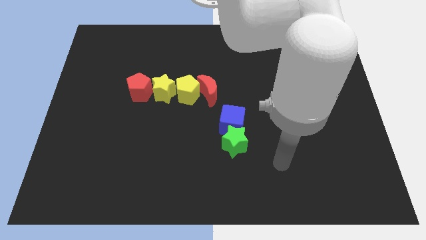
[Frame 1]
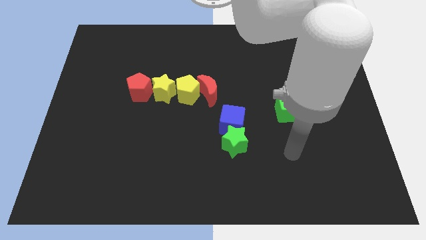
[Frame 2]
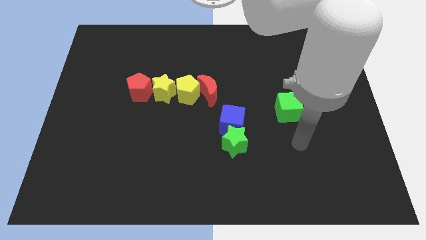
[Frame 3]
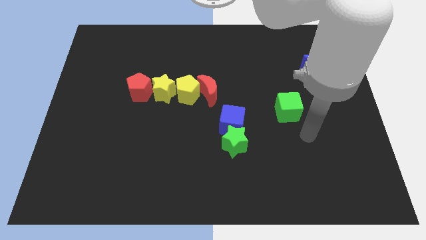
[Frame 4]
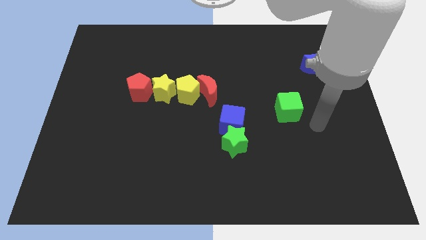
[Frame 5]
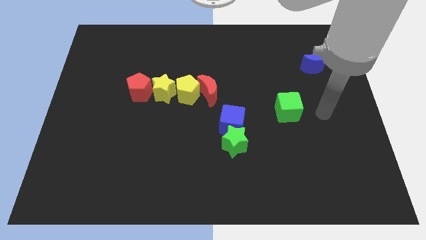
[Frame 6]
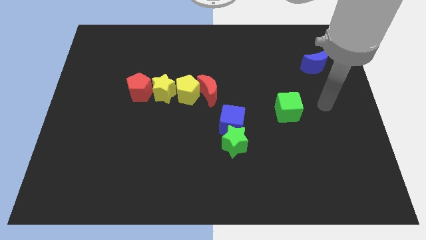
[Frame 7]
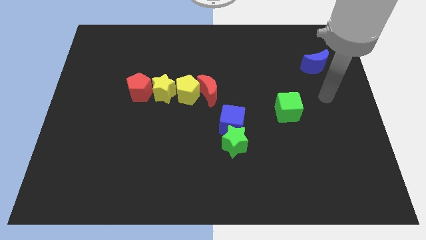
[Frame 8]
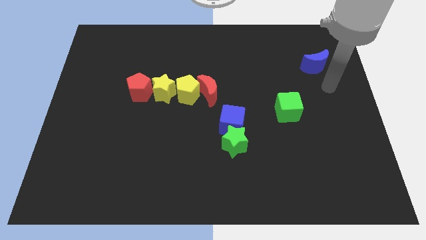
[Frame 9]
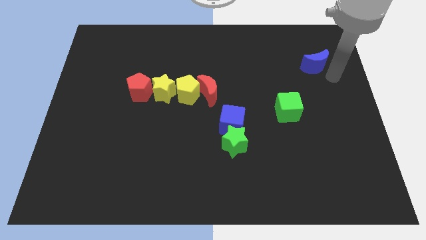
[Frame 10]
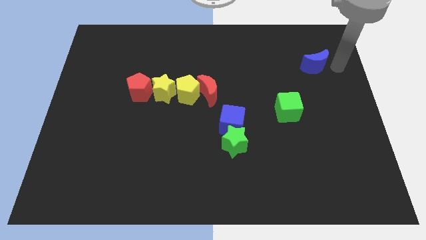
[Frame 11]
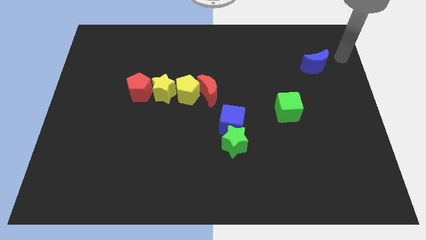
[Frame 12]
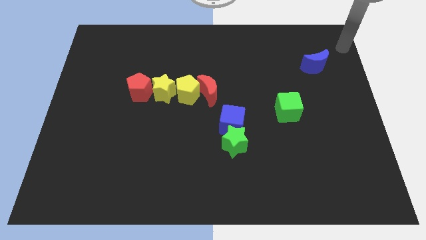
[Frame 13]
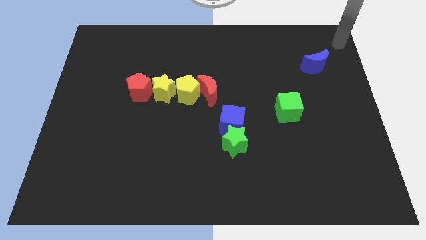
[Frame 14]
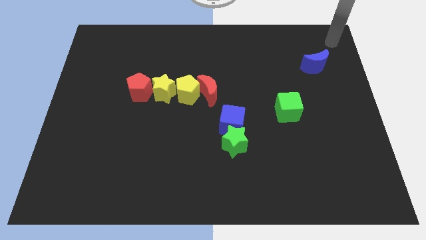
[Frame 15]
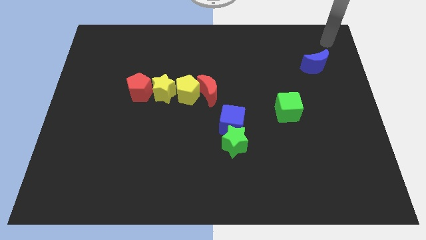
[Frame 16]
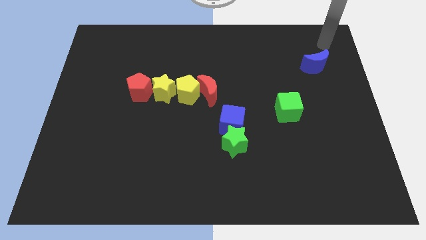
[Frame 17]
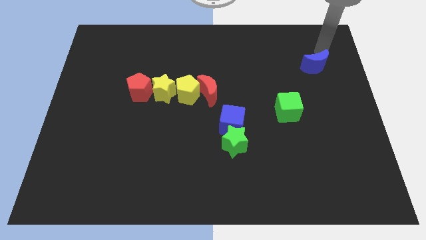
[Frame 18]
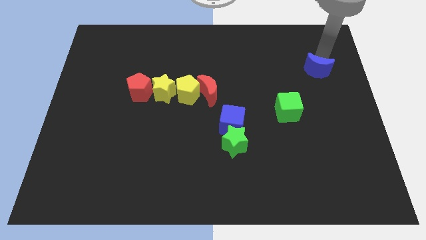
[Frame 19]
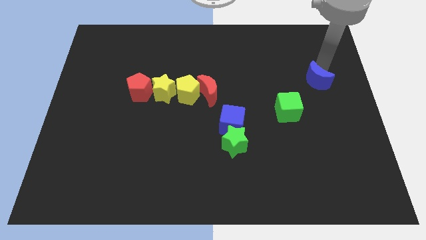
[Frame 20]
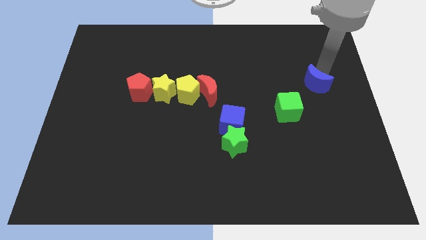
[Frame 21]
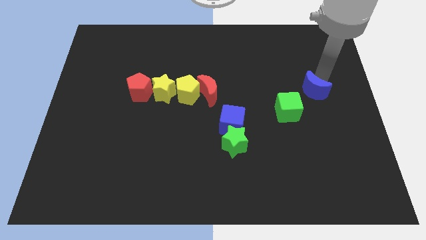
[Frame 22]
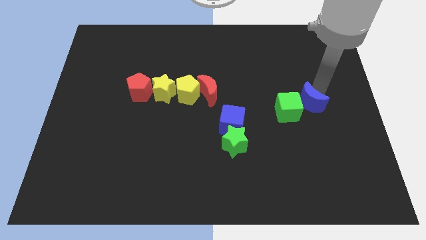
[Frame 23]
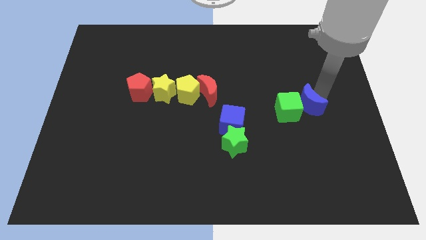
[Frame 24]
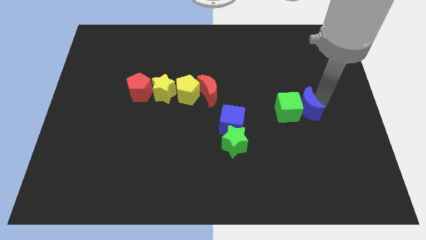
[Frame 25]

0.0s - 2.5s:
place blue crescent right to the green cube

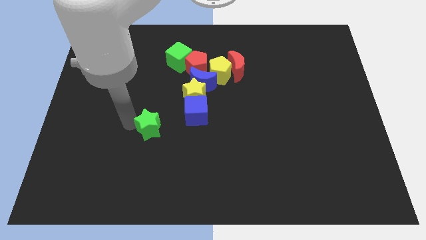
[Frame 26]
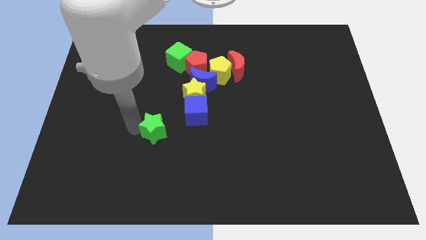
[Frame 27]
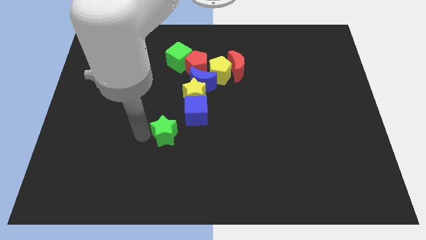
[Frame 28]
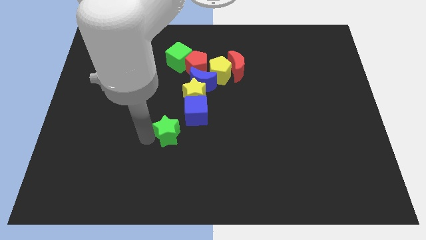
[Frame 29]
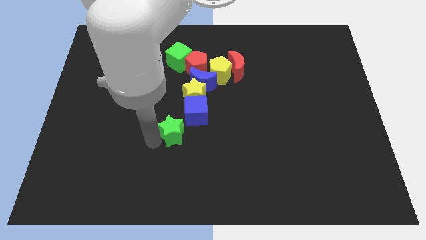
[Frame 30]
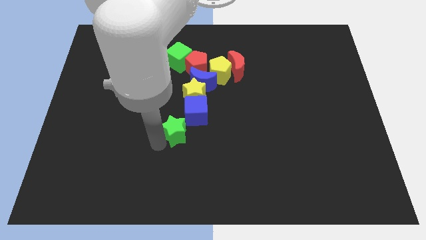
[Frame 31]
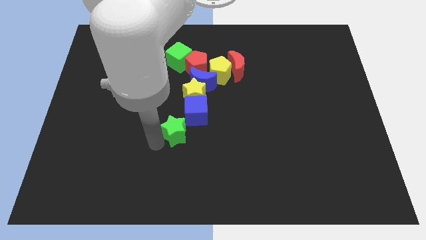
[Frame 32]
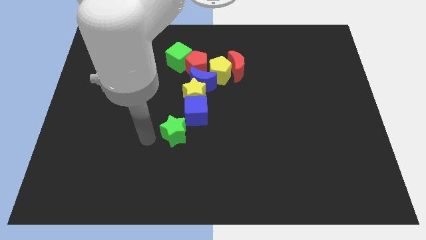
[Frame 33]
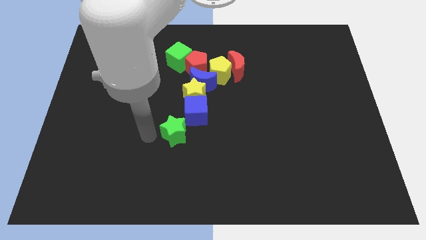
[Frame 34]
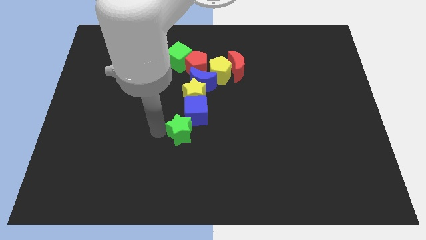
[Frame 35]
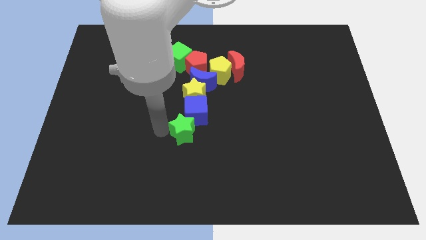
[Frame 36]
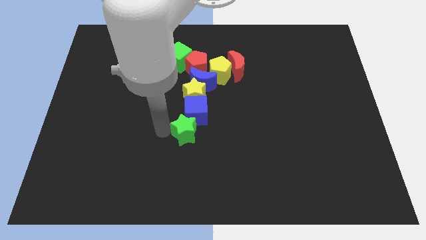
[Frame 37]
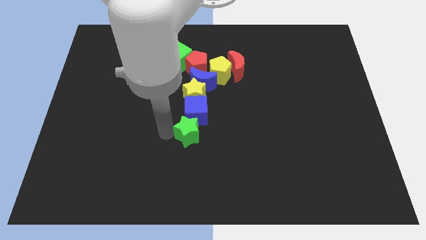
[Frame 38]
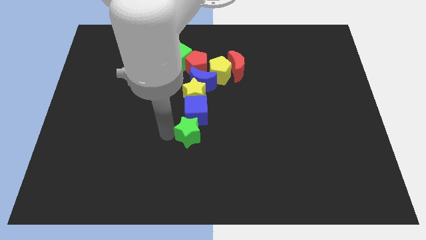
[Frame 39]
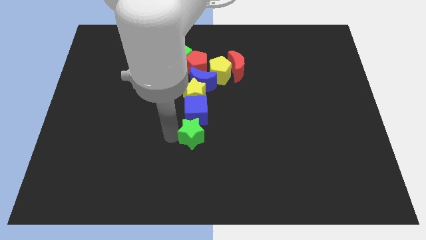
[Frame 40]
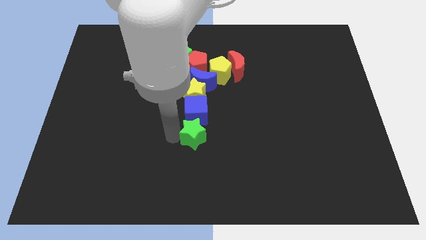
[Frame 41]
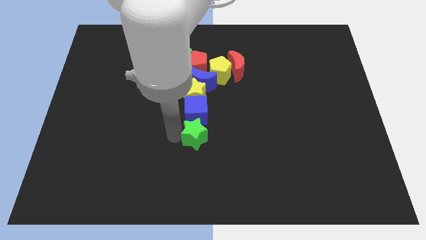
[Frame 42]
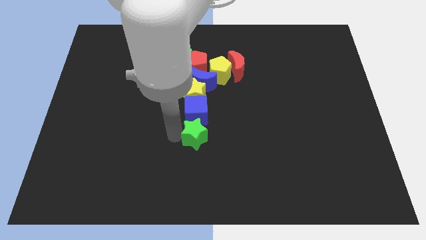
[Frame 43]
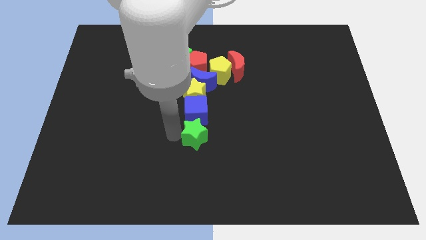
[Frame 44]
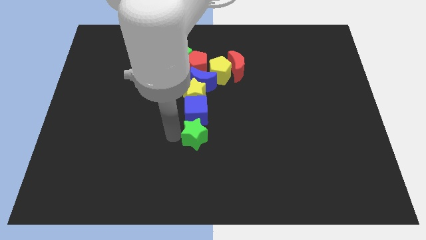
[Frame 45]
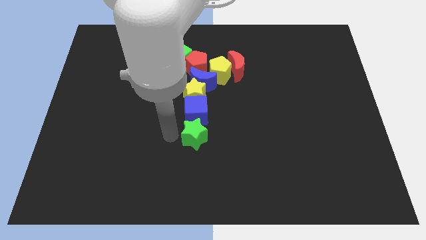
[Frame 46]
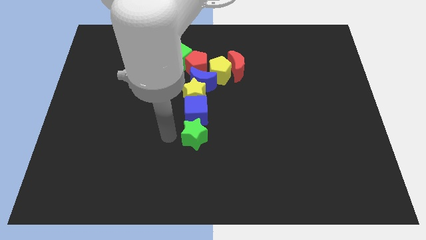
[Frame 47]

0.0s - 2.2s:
place the green star below the blue cube

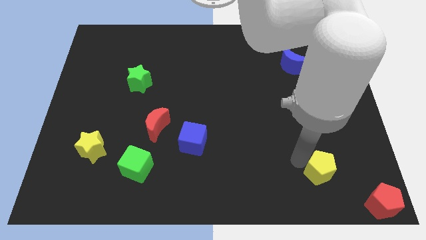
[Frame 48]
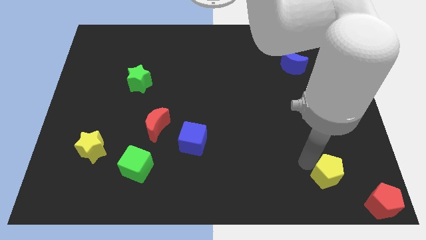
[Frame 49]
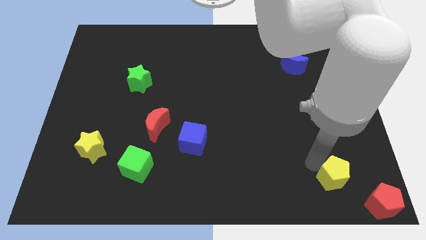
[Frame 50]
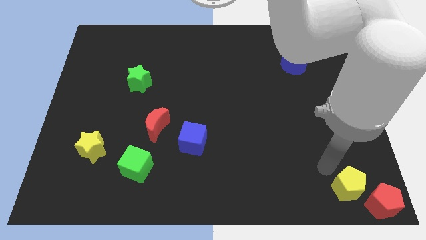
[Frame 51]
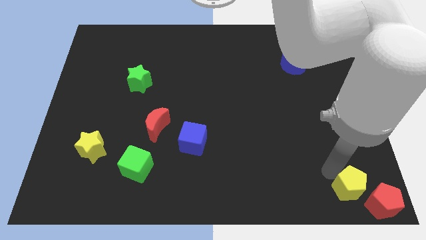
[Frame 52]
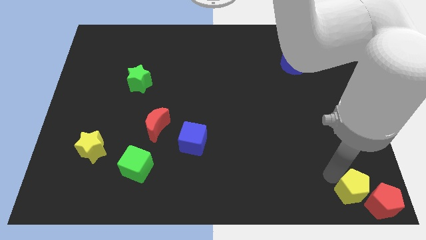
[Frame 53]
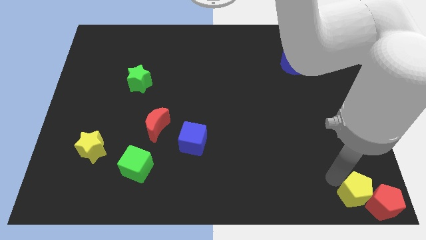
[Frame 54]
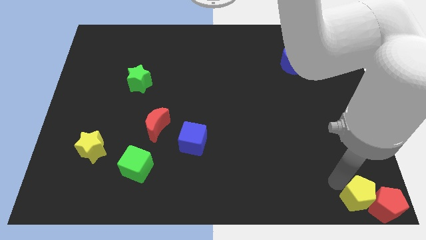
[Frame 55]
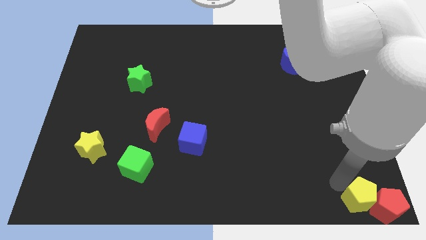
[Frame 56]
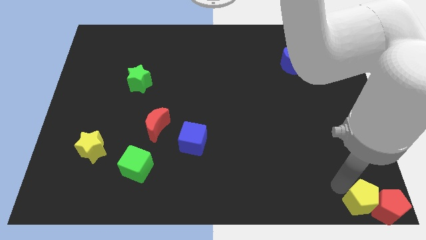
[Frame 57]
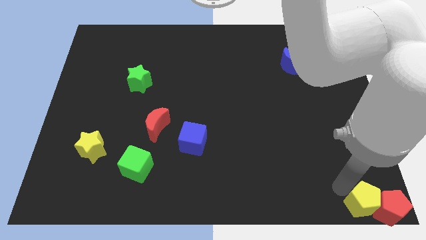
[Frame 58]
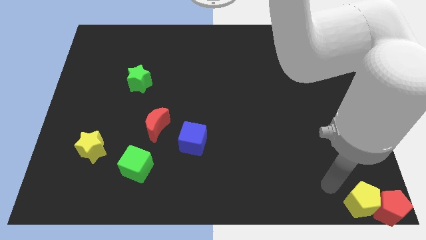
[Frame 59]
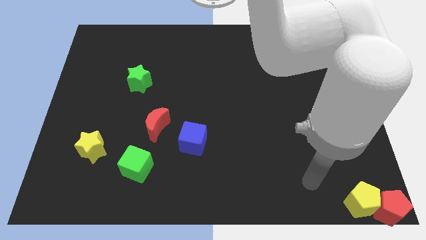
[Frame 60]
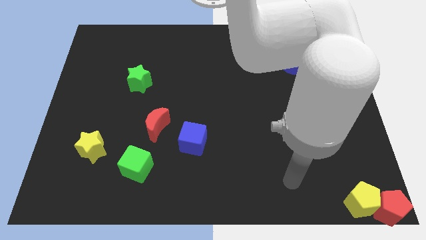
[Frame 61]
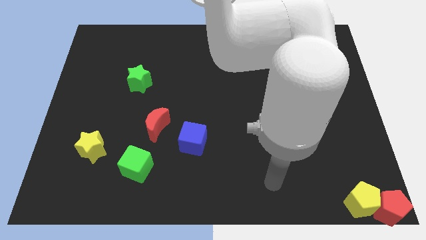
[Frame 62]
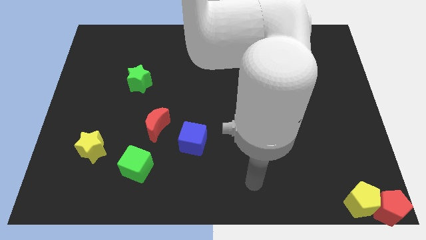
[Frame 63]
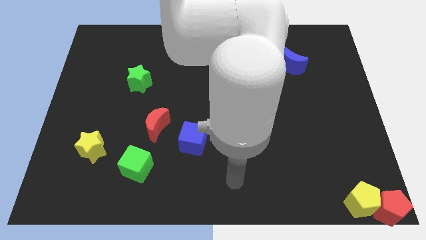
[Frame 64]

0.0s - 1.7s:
move yellow pentagon to the left side of red pentagon

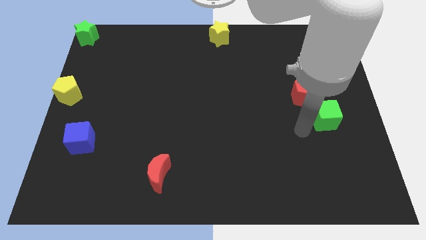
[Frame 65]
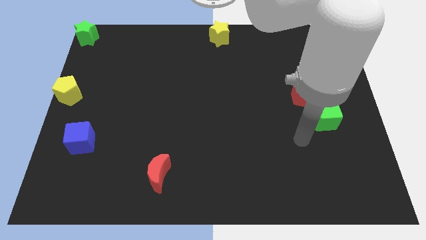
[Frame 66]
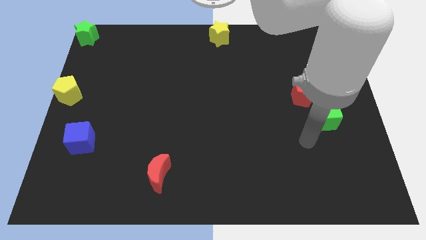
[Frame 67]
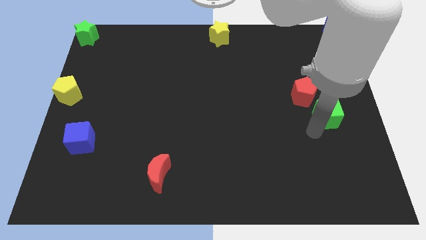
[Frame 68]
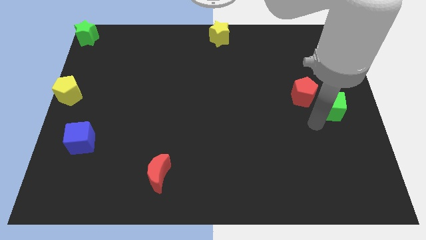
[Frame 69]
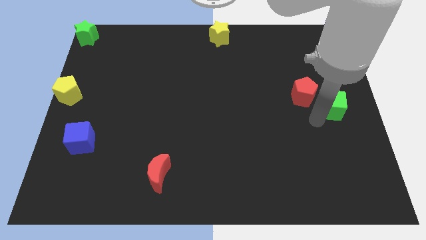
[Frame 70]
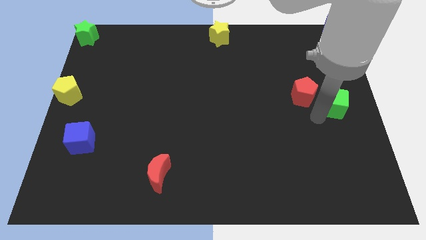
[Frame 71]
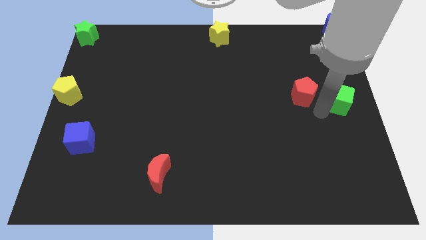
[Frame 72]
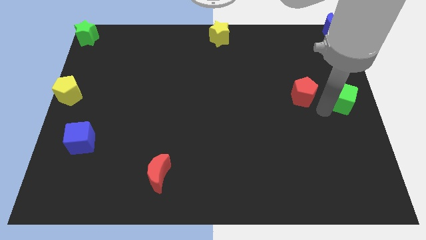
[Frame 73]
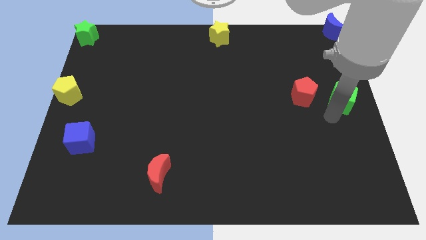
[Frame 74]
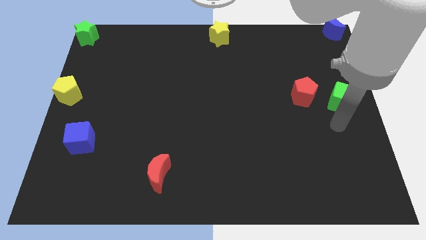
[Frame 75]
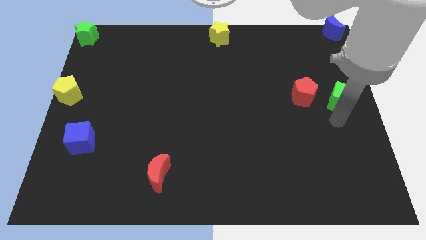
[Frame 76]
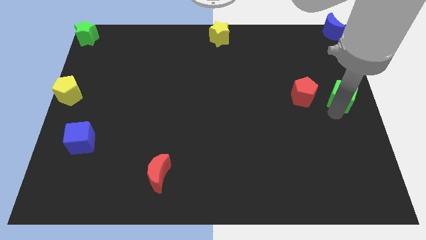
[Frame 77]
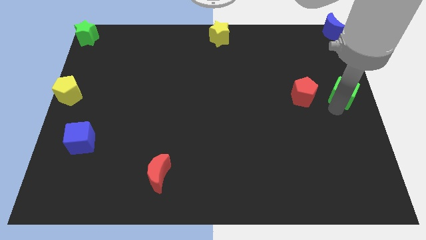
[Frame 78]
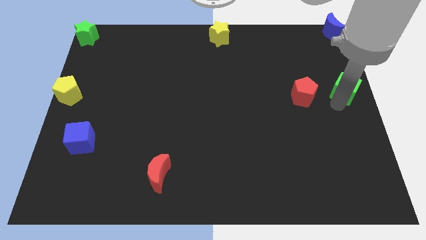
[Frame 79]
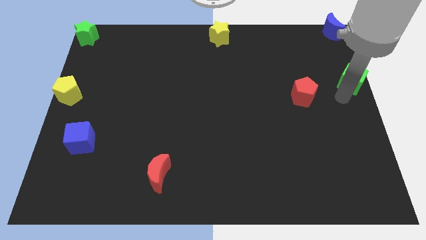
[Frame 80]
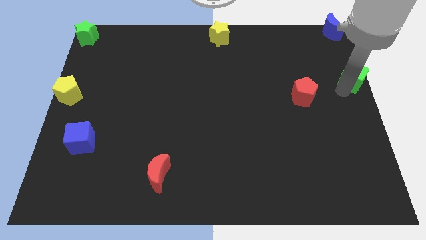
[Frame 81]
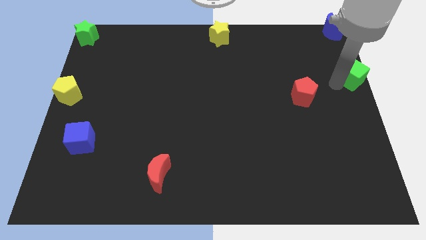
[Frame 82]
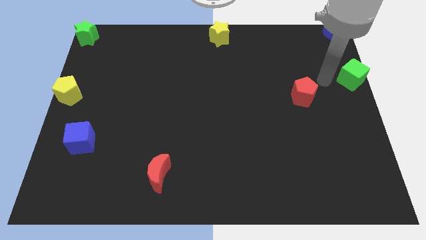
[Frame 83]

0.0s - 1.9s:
put the green cube vertically below the blue moon

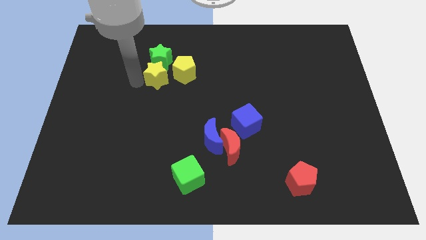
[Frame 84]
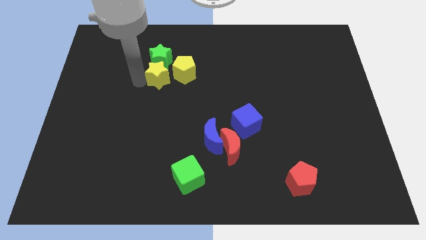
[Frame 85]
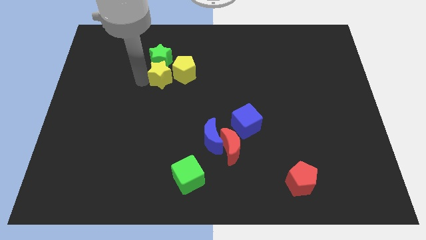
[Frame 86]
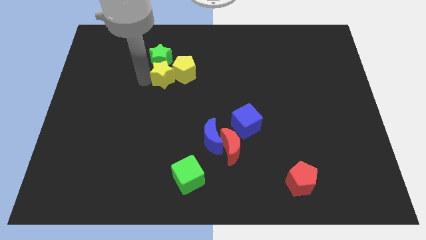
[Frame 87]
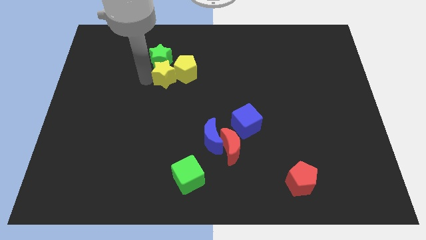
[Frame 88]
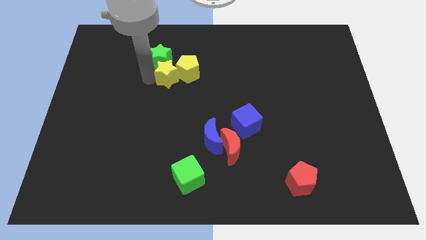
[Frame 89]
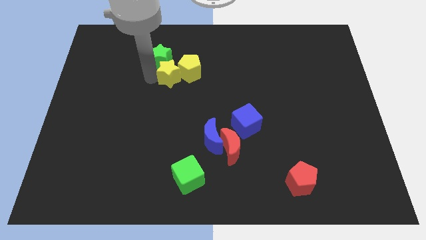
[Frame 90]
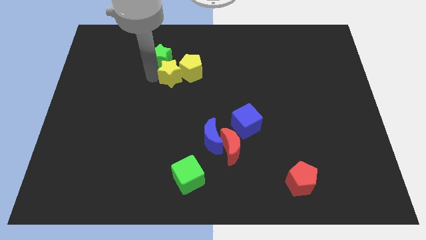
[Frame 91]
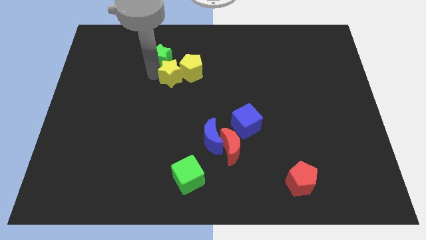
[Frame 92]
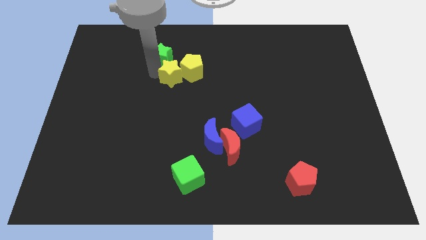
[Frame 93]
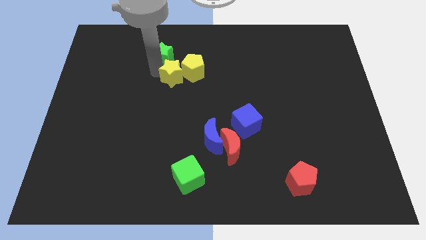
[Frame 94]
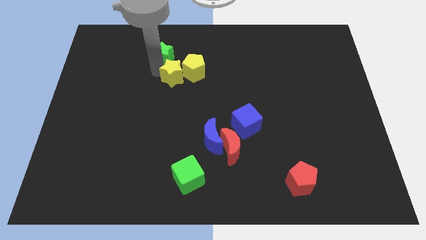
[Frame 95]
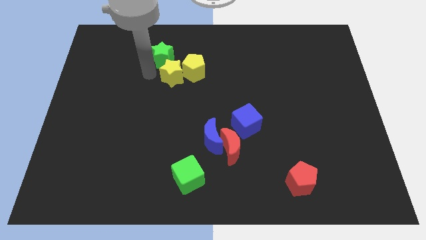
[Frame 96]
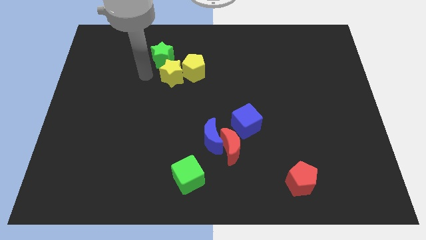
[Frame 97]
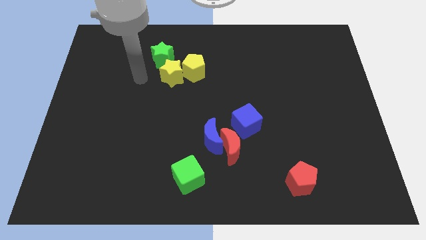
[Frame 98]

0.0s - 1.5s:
push yellow star into yellow pentagon
